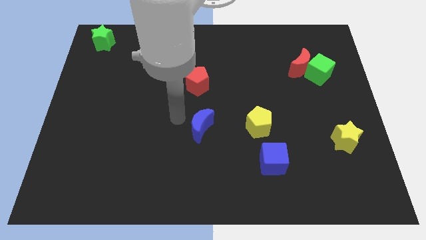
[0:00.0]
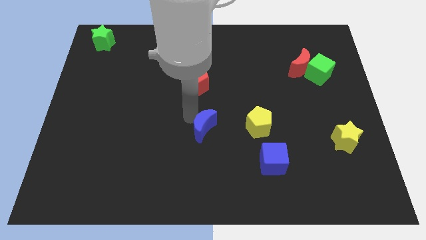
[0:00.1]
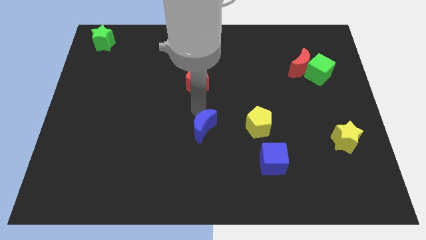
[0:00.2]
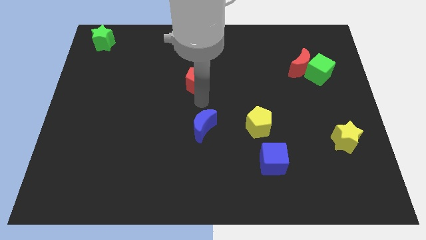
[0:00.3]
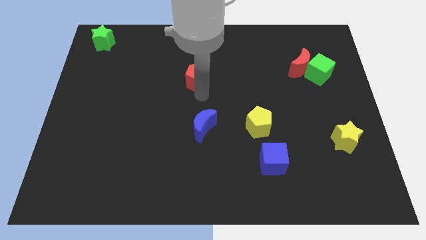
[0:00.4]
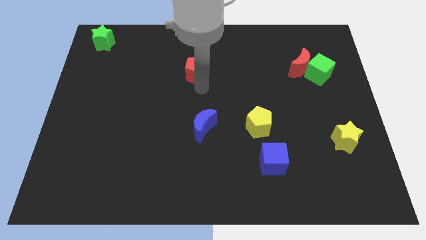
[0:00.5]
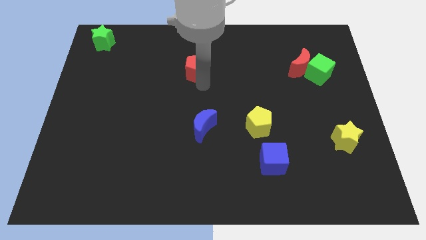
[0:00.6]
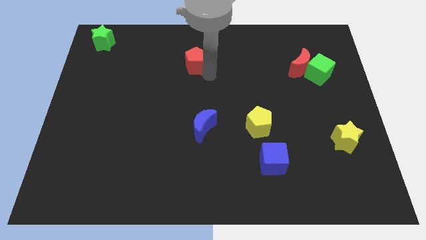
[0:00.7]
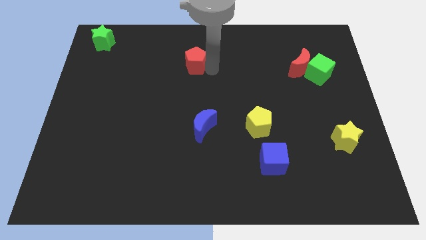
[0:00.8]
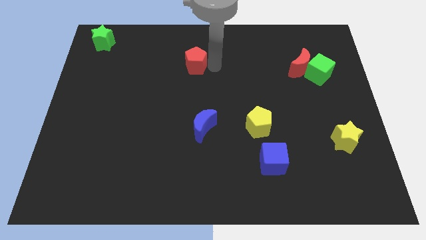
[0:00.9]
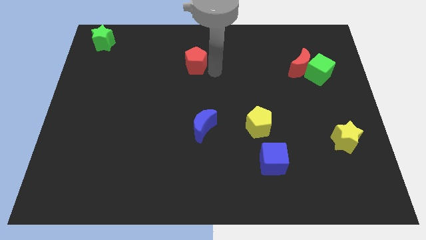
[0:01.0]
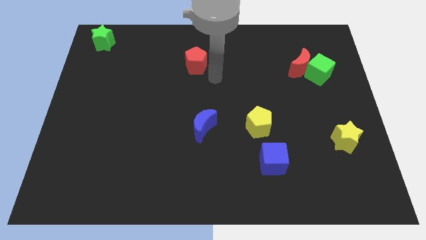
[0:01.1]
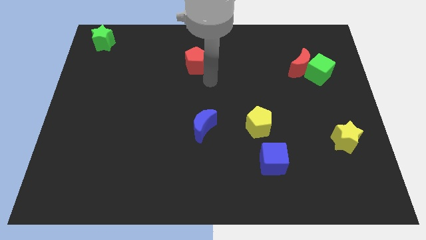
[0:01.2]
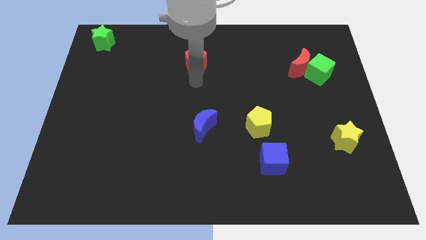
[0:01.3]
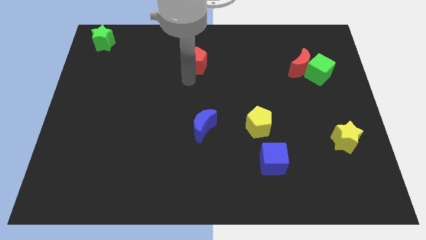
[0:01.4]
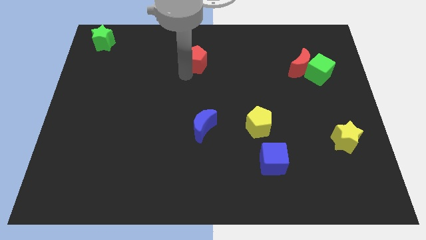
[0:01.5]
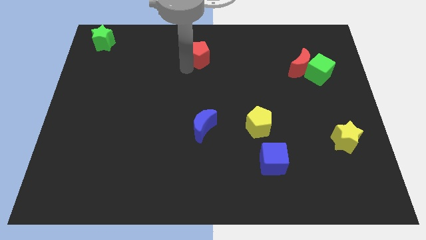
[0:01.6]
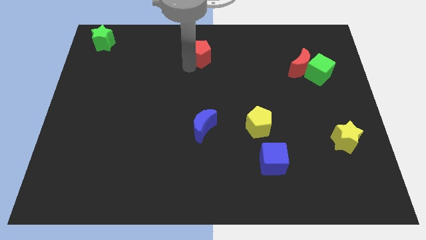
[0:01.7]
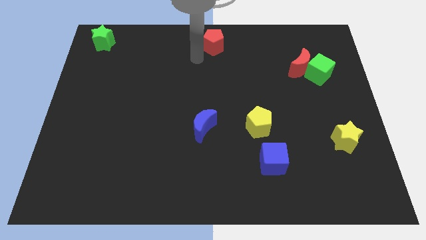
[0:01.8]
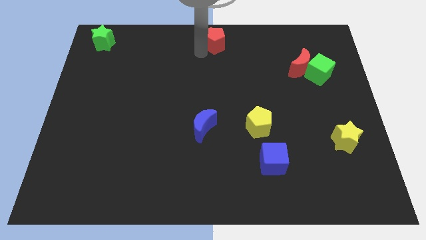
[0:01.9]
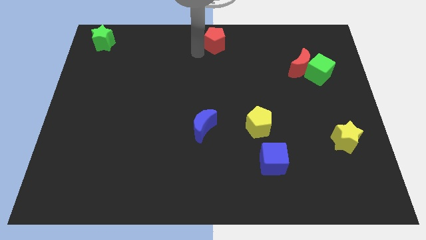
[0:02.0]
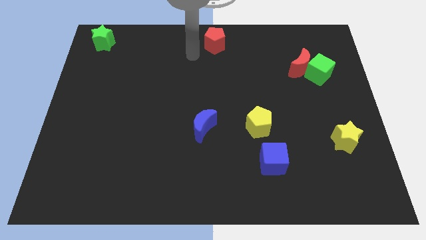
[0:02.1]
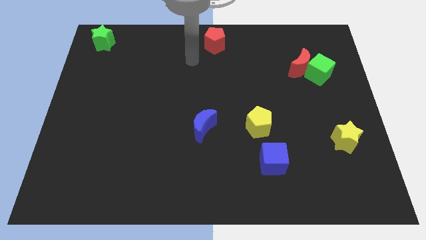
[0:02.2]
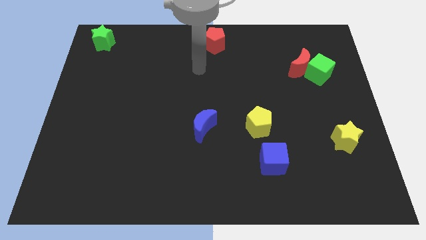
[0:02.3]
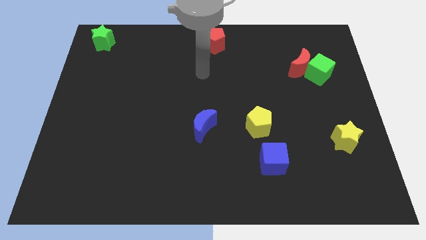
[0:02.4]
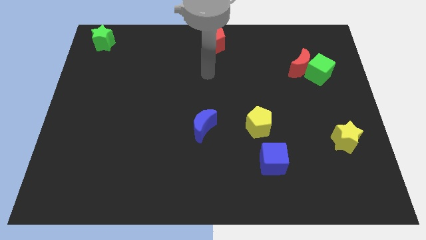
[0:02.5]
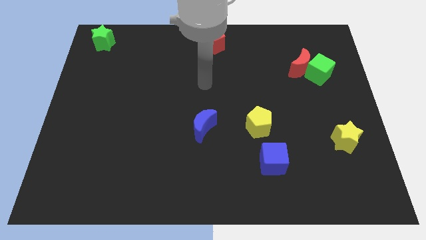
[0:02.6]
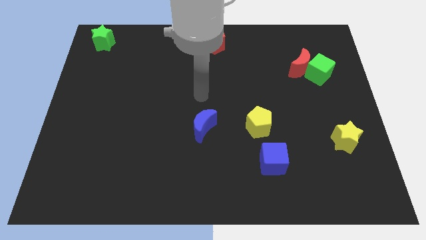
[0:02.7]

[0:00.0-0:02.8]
push the red pentagon to the top center of the board

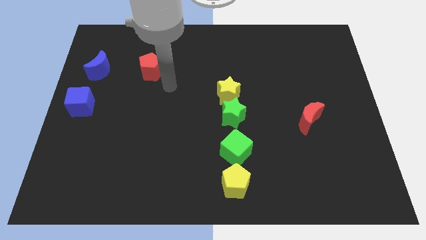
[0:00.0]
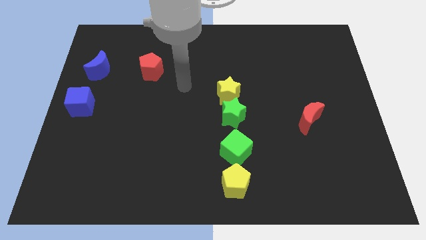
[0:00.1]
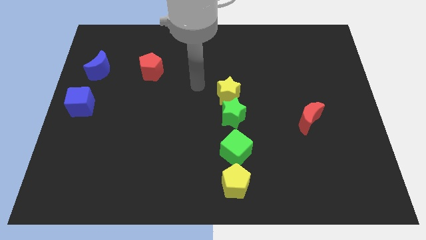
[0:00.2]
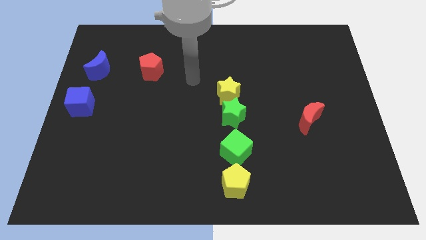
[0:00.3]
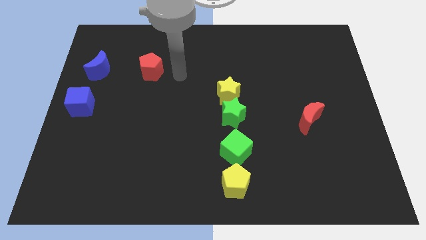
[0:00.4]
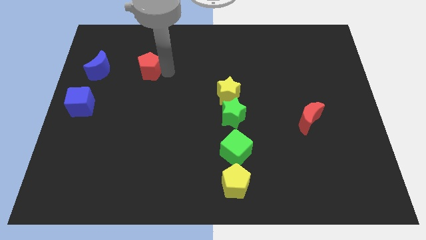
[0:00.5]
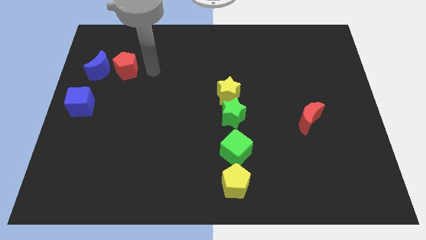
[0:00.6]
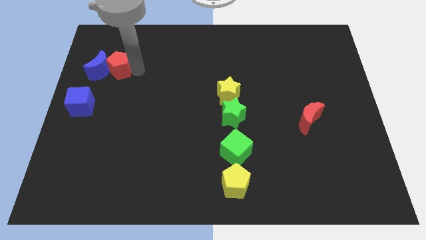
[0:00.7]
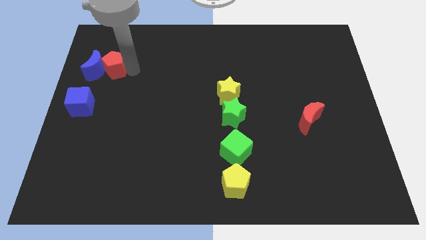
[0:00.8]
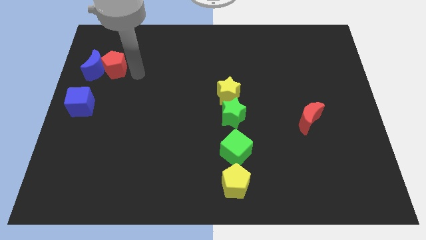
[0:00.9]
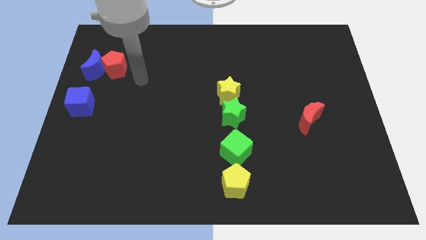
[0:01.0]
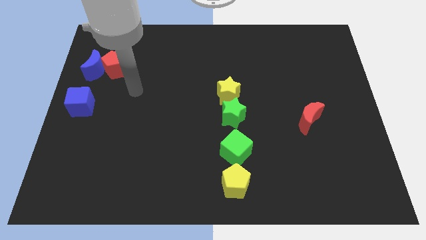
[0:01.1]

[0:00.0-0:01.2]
move the red pentagon close to blue moon

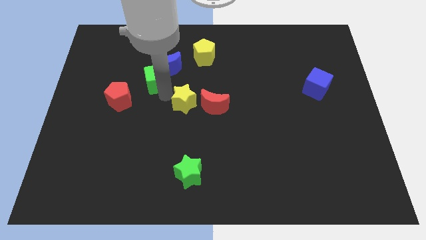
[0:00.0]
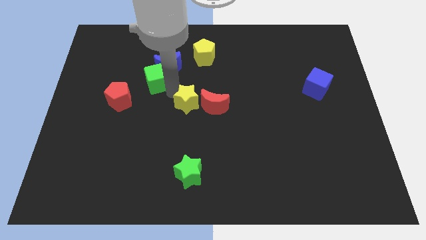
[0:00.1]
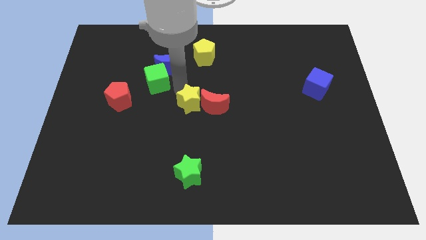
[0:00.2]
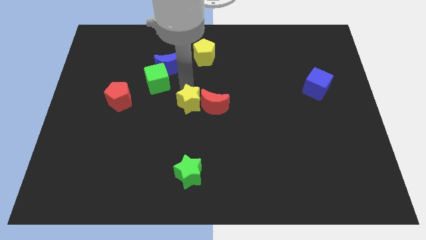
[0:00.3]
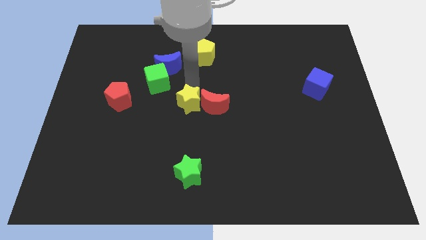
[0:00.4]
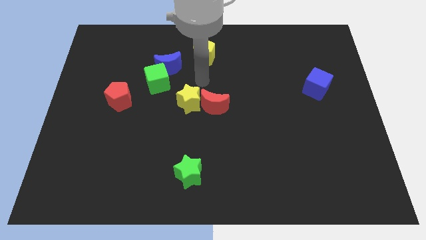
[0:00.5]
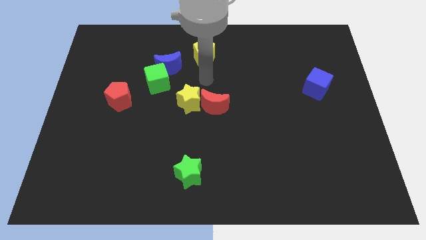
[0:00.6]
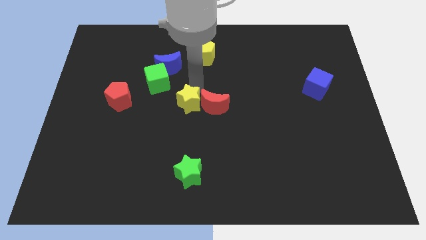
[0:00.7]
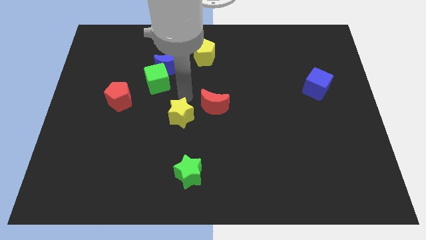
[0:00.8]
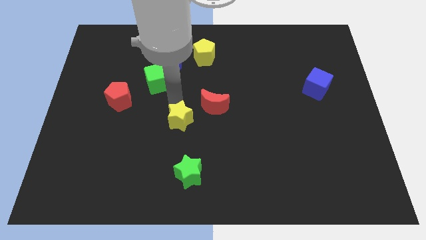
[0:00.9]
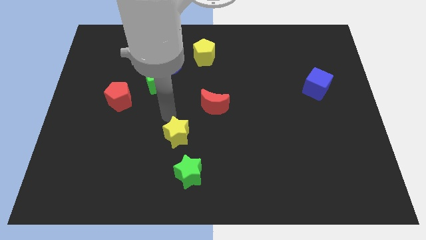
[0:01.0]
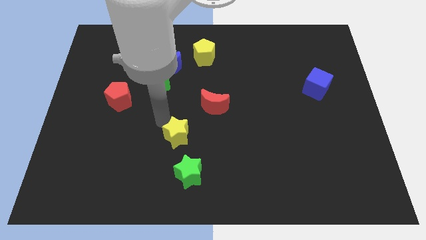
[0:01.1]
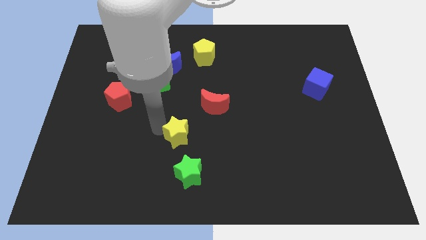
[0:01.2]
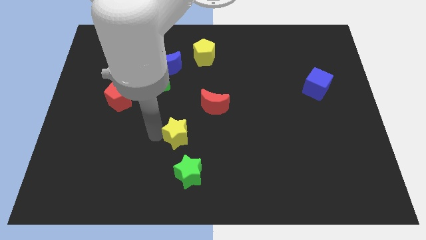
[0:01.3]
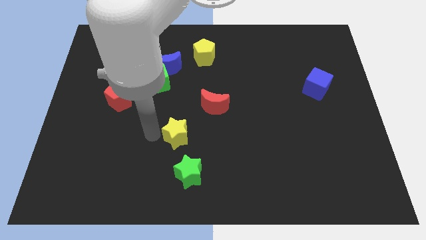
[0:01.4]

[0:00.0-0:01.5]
place the yellow star to the top side of the green star

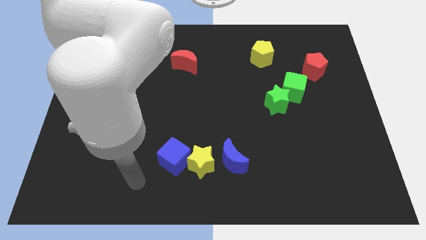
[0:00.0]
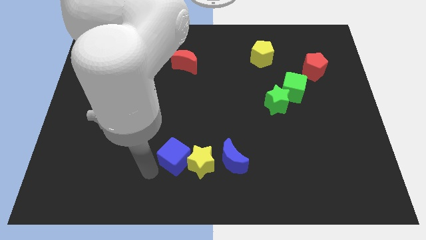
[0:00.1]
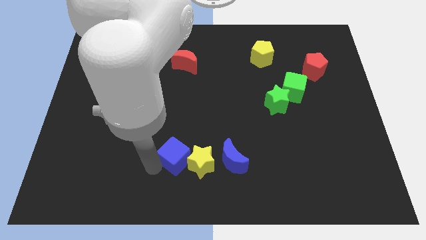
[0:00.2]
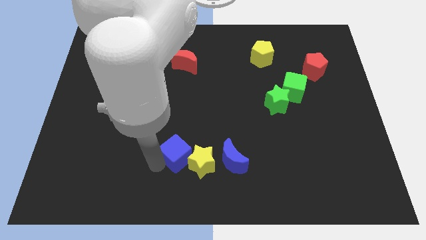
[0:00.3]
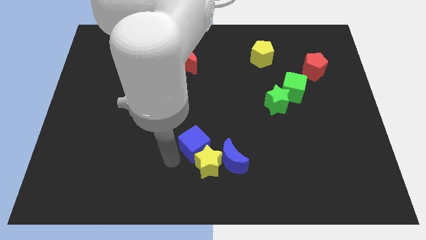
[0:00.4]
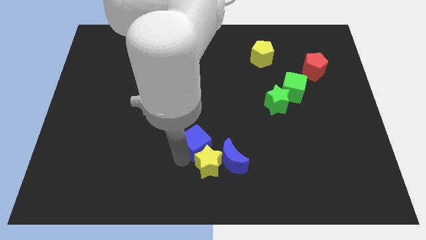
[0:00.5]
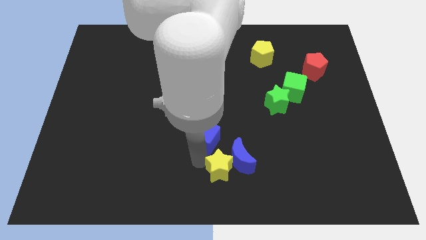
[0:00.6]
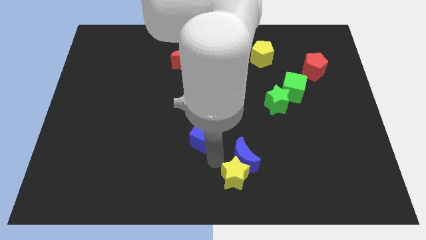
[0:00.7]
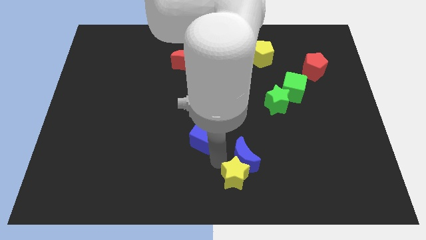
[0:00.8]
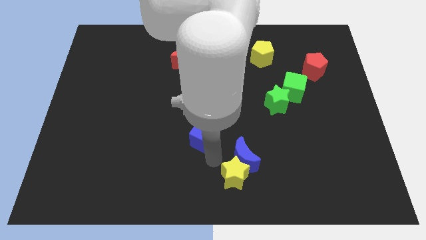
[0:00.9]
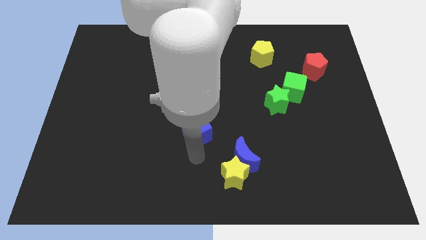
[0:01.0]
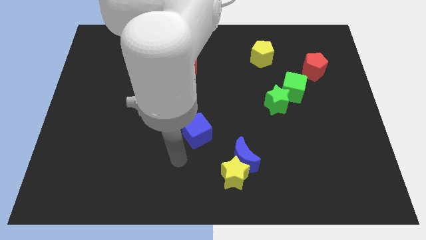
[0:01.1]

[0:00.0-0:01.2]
move the blue cube to the bottom center

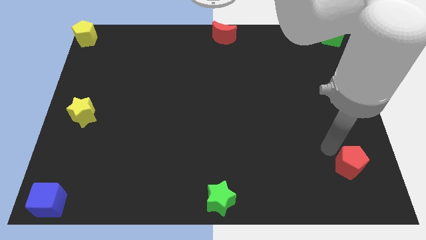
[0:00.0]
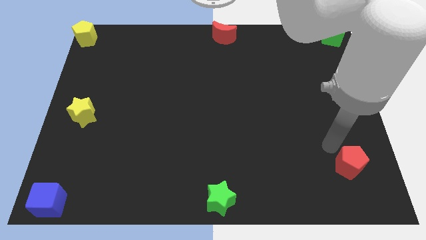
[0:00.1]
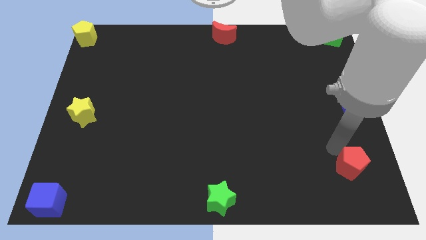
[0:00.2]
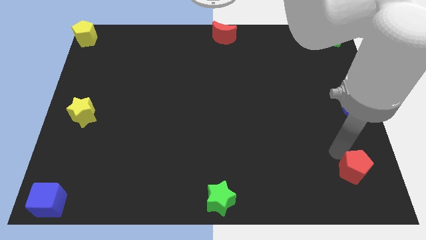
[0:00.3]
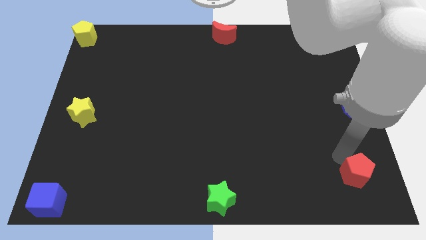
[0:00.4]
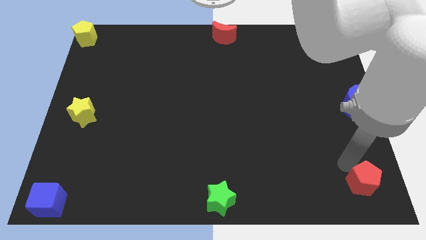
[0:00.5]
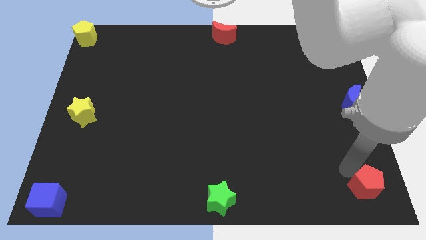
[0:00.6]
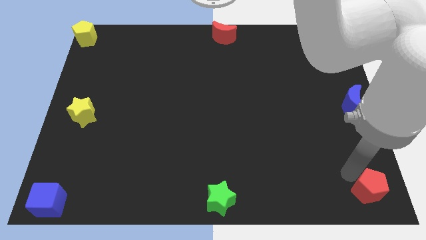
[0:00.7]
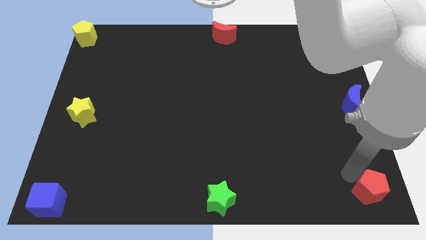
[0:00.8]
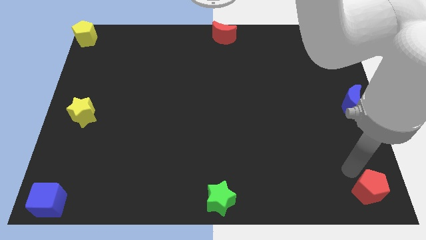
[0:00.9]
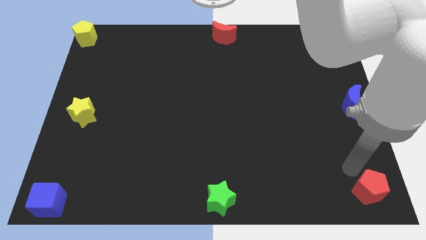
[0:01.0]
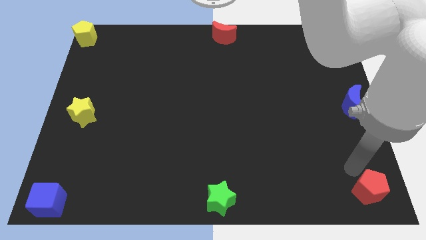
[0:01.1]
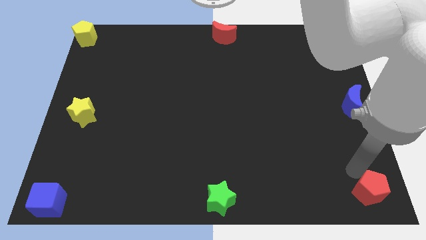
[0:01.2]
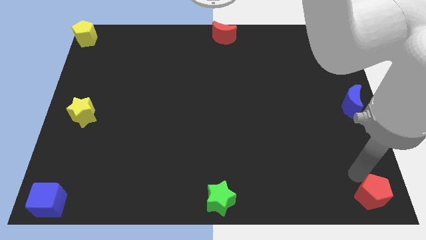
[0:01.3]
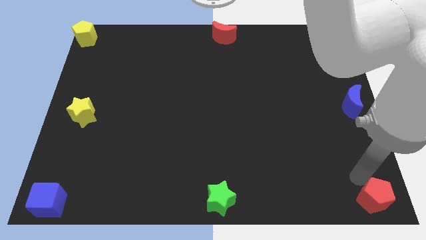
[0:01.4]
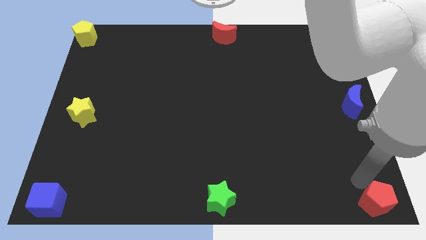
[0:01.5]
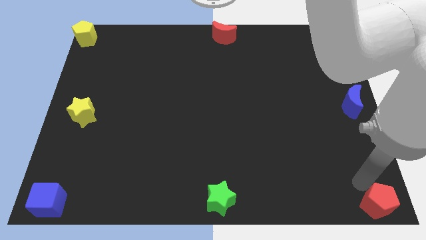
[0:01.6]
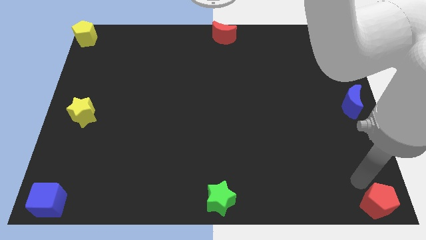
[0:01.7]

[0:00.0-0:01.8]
push the red crescent to the bottom right corner of the board

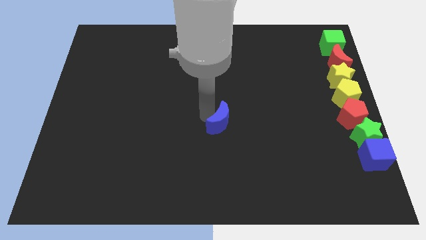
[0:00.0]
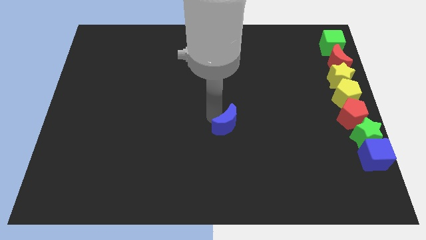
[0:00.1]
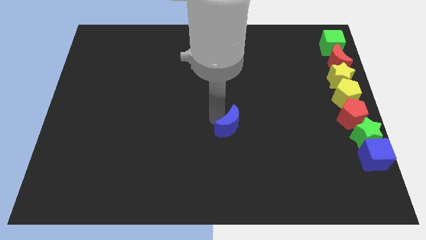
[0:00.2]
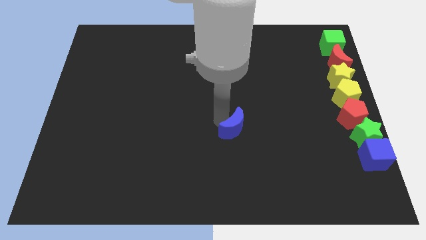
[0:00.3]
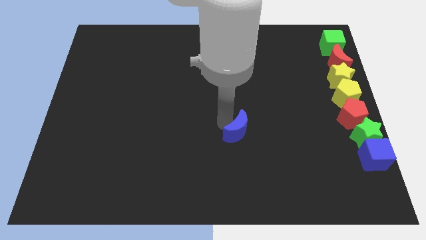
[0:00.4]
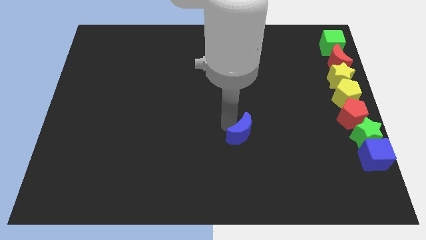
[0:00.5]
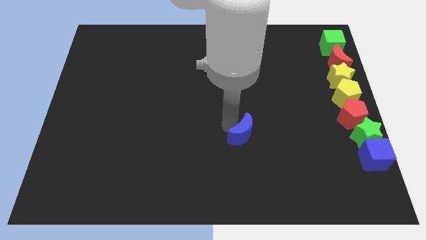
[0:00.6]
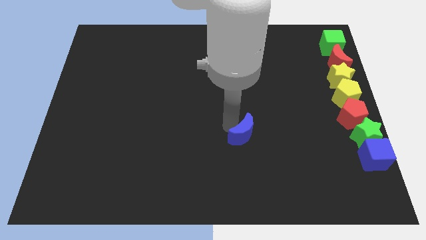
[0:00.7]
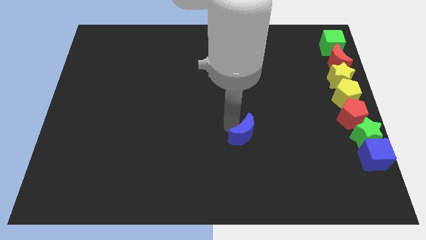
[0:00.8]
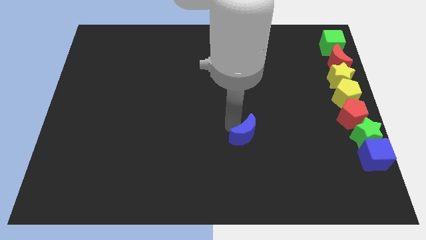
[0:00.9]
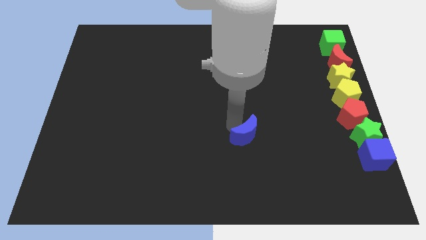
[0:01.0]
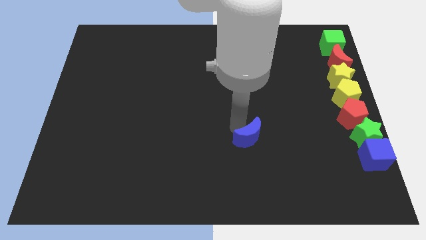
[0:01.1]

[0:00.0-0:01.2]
move the blue crescent slightly to the down
